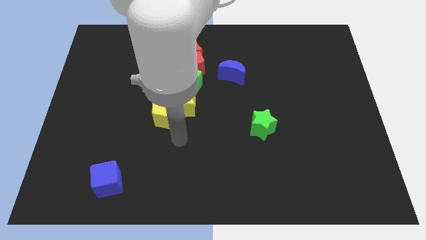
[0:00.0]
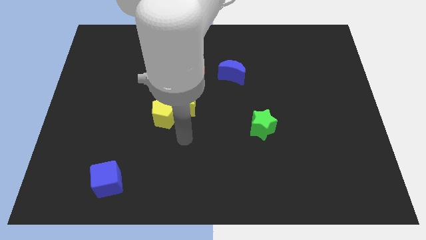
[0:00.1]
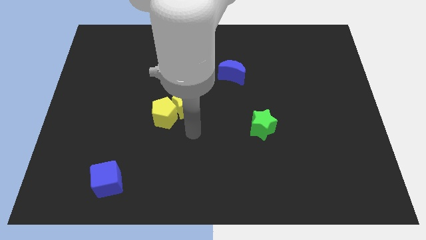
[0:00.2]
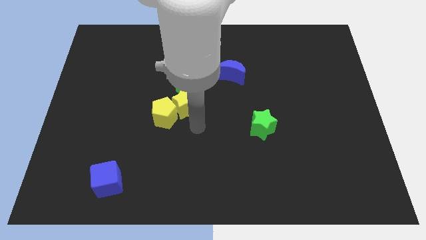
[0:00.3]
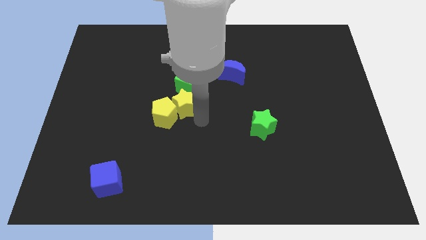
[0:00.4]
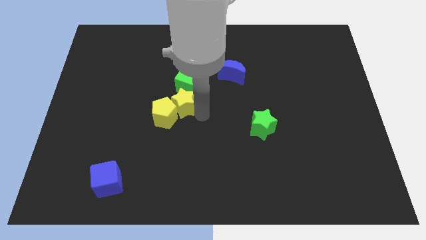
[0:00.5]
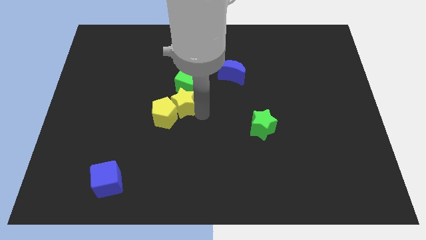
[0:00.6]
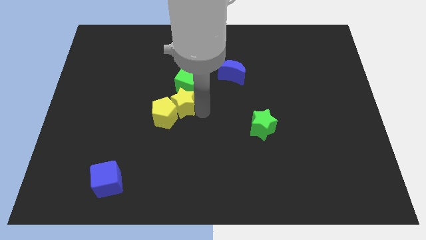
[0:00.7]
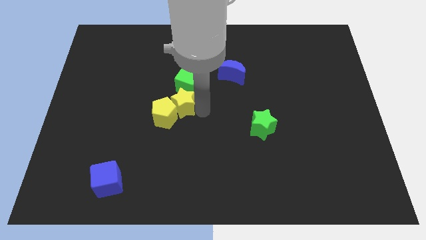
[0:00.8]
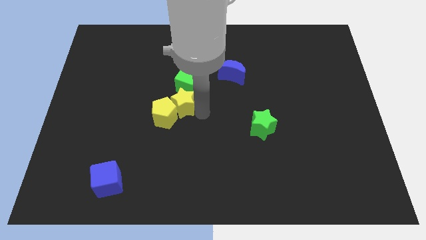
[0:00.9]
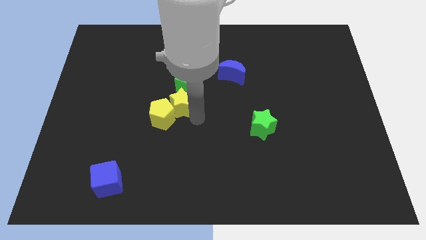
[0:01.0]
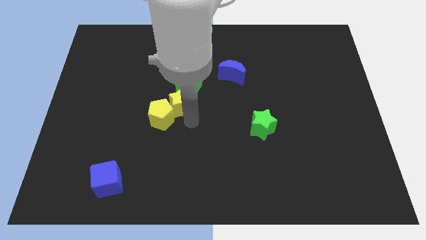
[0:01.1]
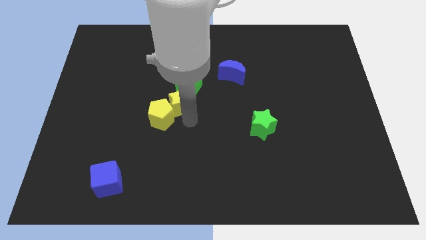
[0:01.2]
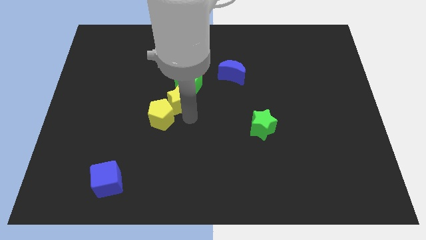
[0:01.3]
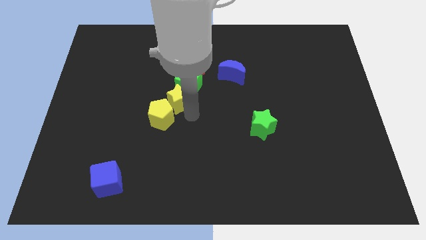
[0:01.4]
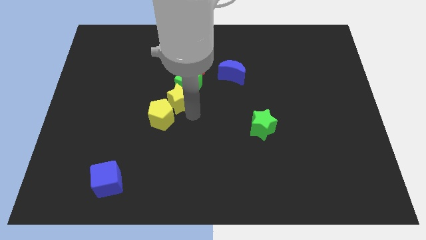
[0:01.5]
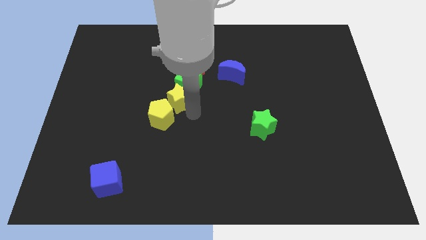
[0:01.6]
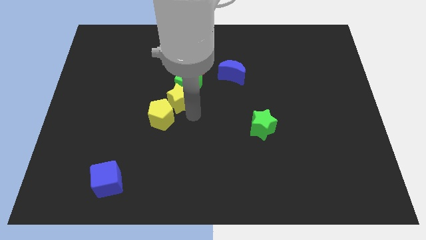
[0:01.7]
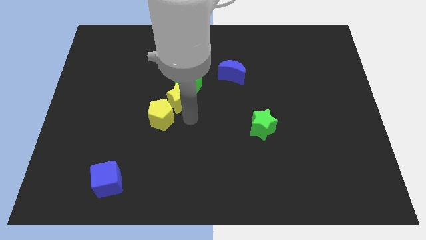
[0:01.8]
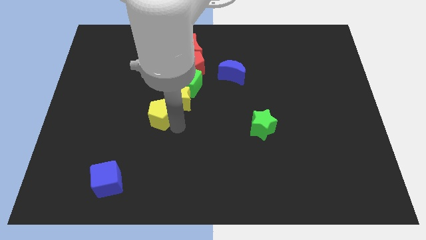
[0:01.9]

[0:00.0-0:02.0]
push the yellow star below green cube

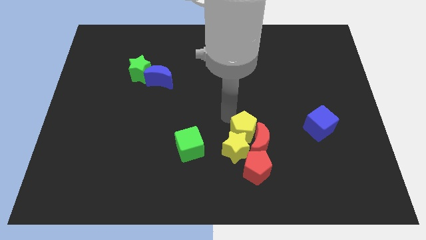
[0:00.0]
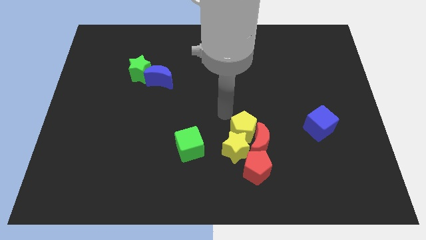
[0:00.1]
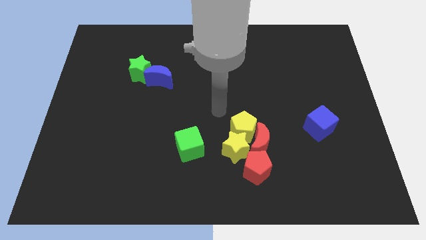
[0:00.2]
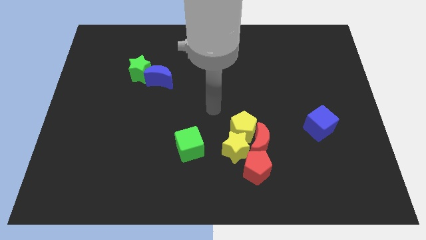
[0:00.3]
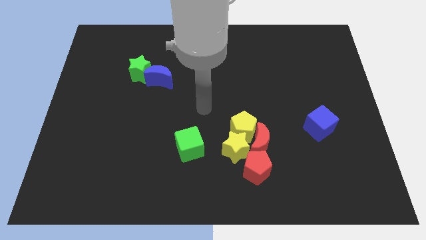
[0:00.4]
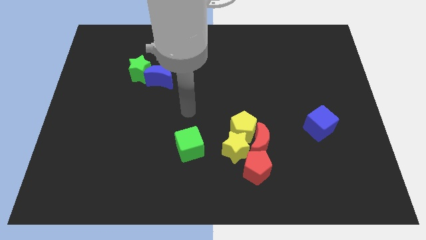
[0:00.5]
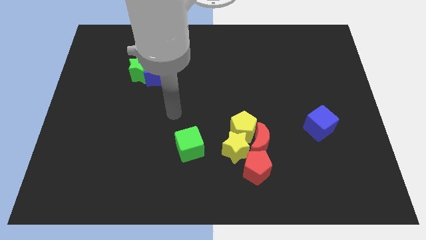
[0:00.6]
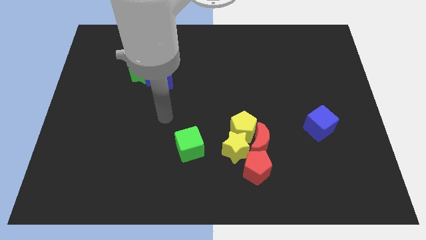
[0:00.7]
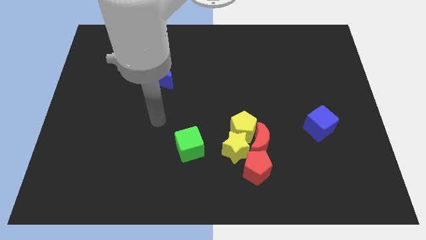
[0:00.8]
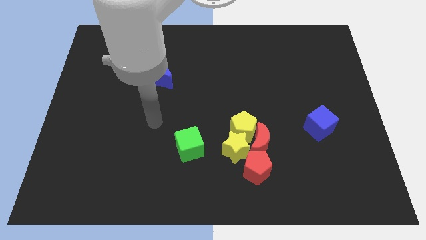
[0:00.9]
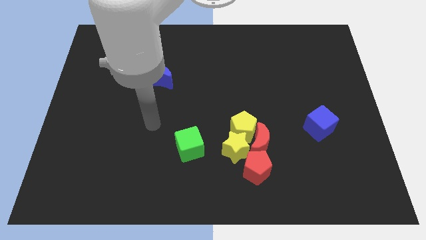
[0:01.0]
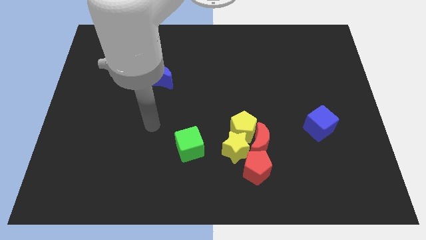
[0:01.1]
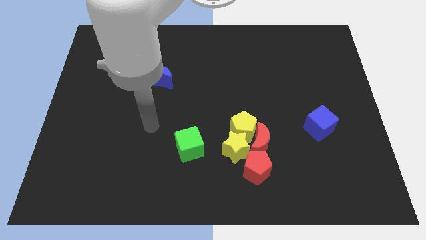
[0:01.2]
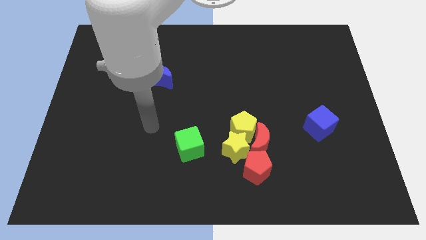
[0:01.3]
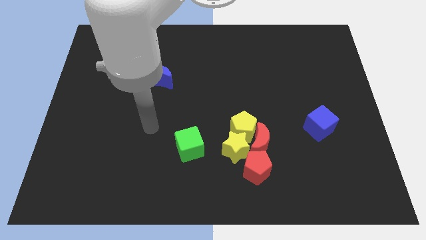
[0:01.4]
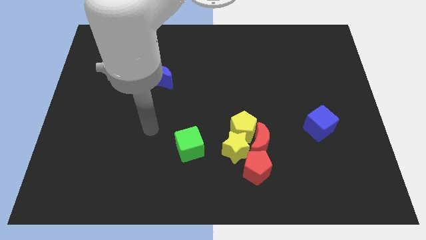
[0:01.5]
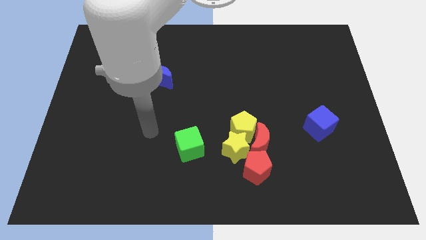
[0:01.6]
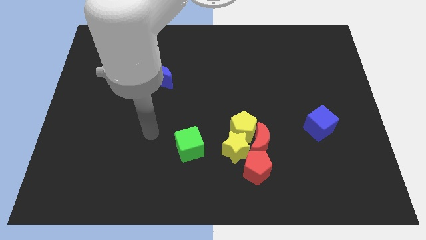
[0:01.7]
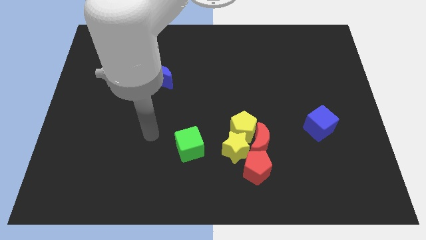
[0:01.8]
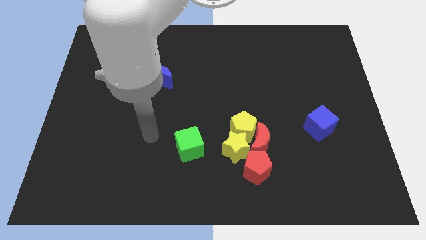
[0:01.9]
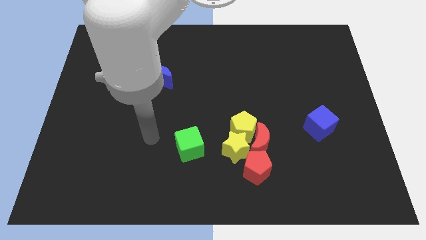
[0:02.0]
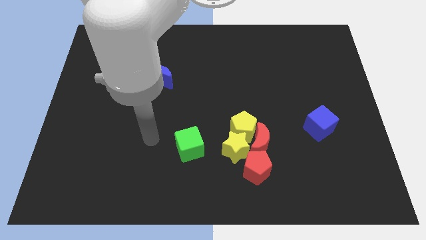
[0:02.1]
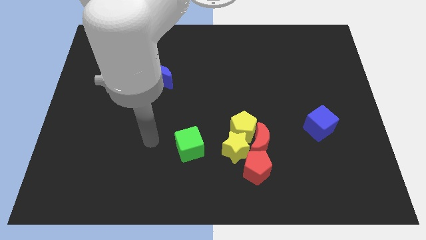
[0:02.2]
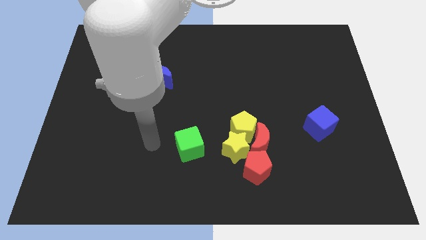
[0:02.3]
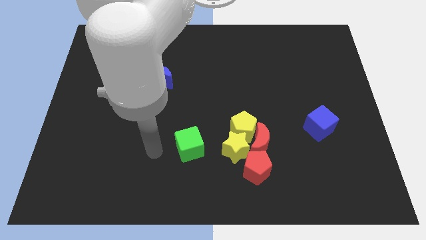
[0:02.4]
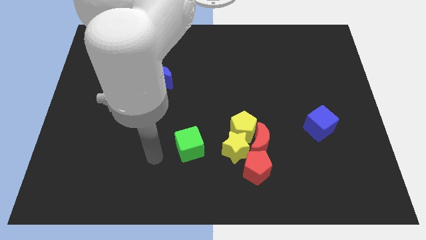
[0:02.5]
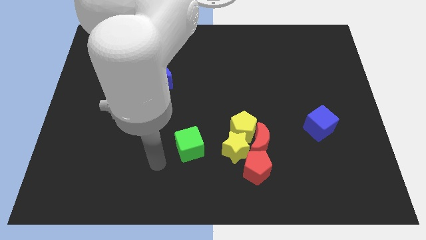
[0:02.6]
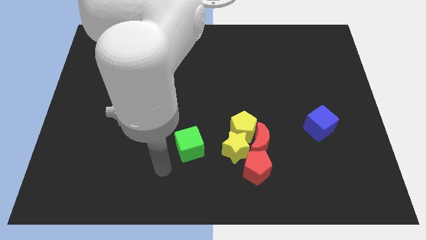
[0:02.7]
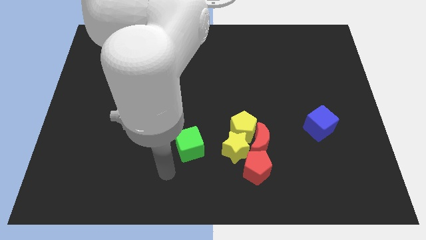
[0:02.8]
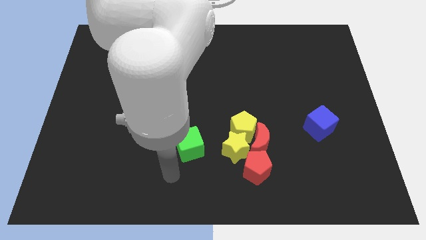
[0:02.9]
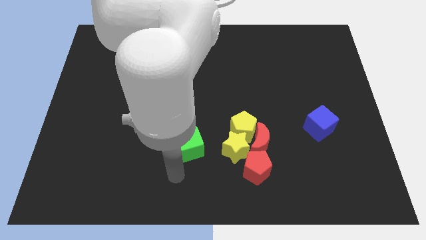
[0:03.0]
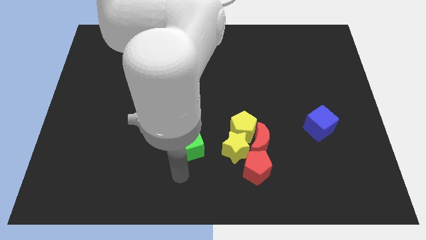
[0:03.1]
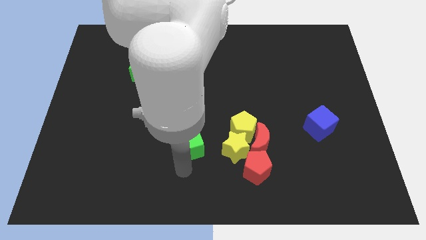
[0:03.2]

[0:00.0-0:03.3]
move your arm at the bottom of green cube

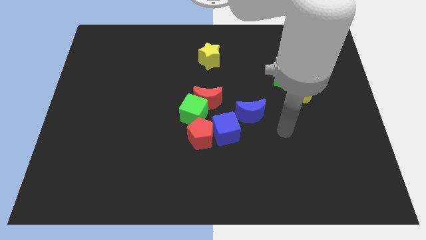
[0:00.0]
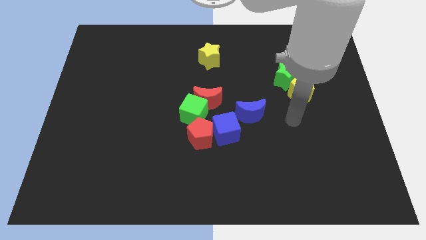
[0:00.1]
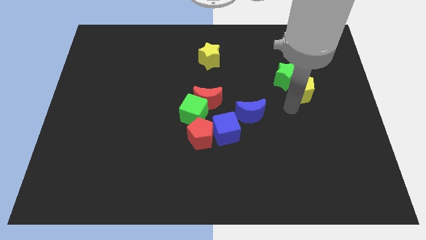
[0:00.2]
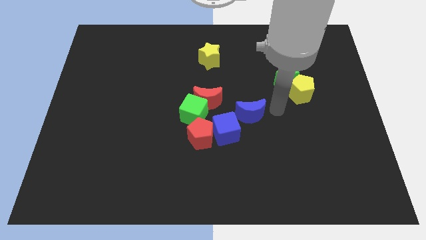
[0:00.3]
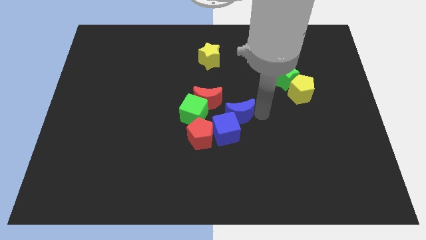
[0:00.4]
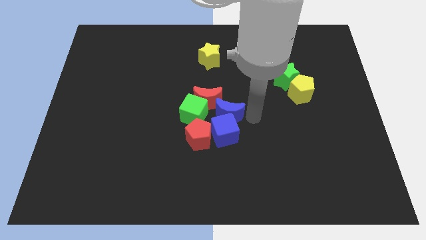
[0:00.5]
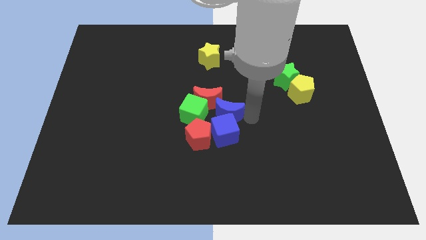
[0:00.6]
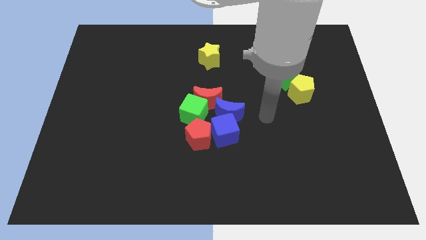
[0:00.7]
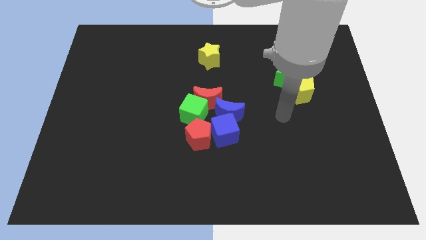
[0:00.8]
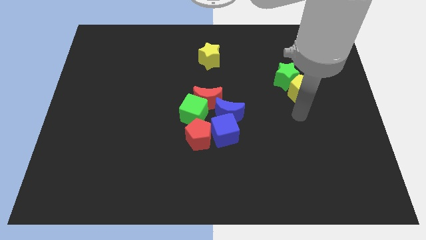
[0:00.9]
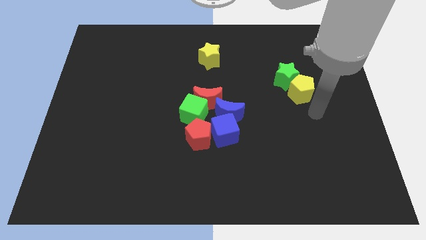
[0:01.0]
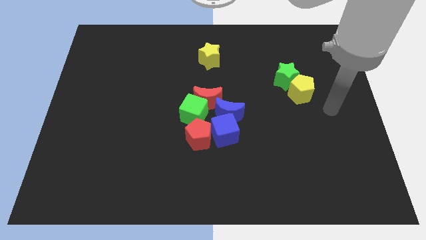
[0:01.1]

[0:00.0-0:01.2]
move blue moon to the center of the board

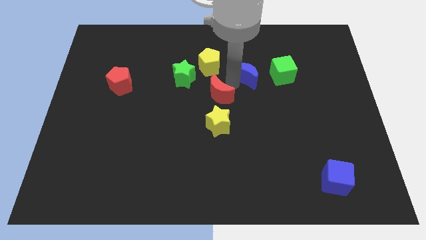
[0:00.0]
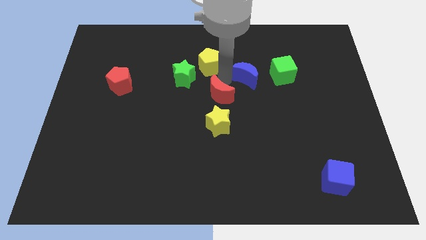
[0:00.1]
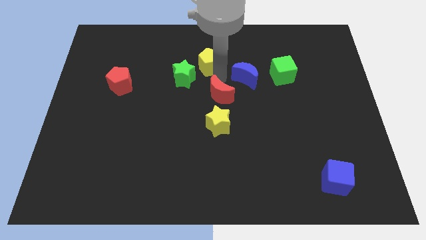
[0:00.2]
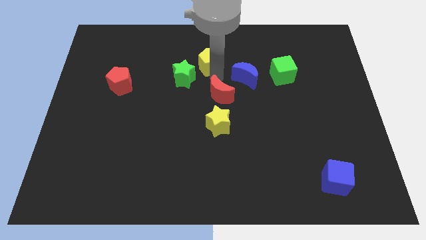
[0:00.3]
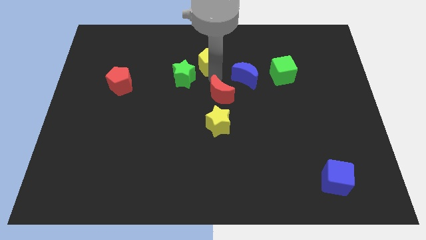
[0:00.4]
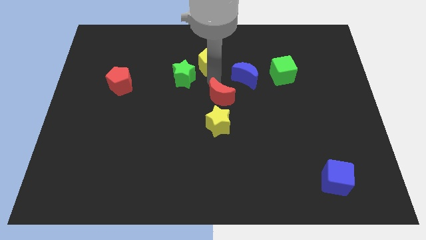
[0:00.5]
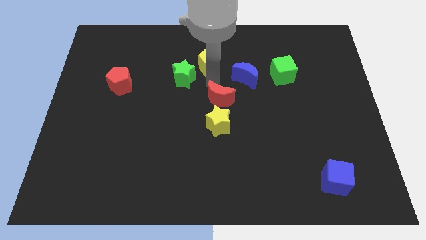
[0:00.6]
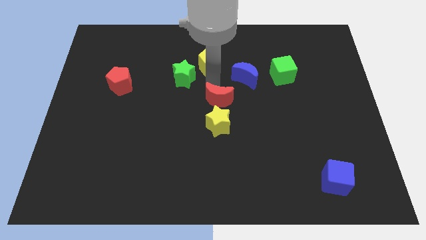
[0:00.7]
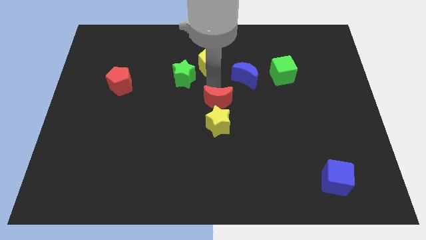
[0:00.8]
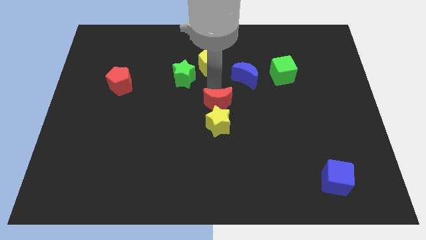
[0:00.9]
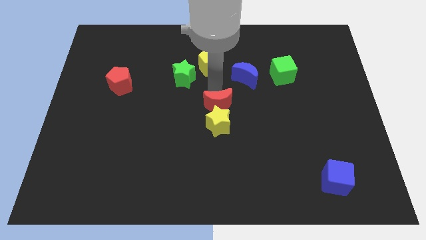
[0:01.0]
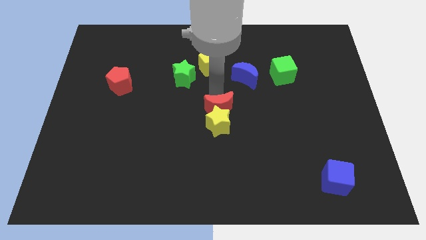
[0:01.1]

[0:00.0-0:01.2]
move the red moon near to the yellow star

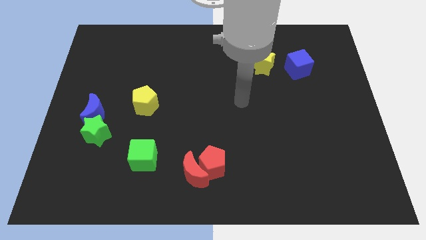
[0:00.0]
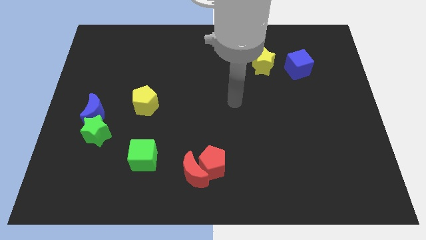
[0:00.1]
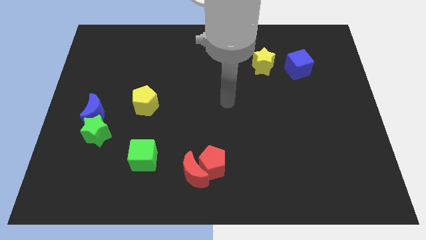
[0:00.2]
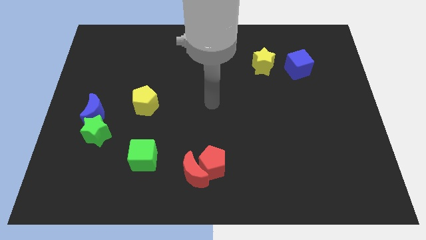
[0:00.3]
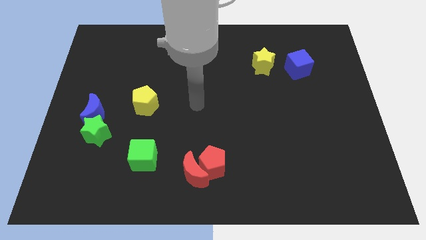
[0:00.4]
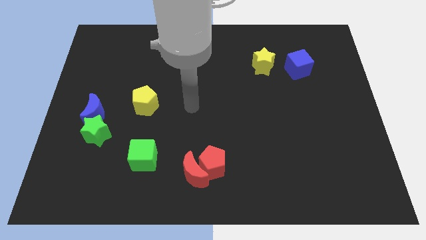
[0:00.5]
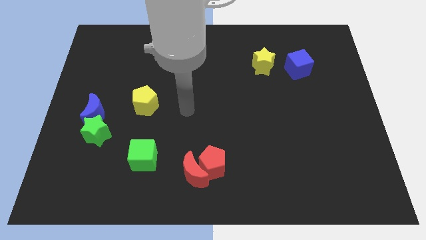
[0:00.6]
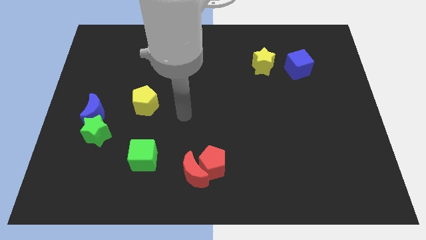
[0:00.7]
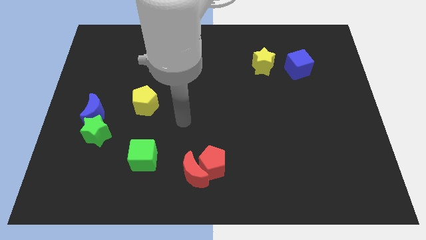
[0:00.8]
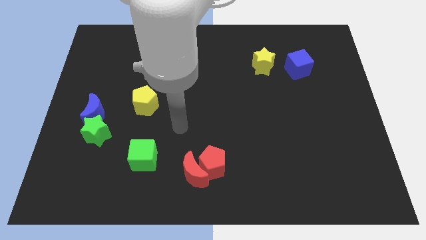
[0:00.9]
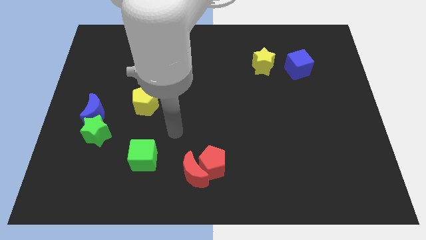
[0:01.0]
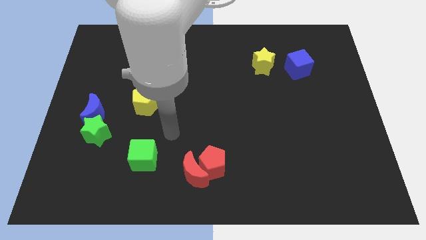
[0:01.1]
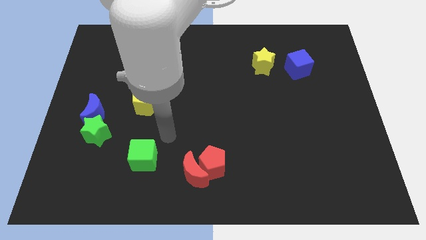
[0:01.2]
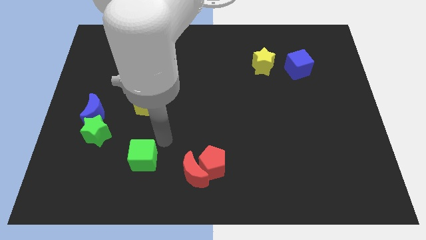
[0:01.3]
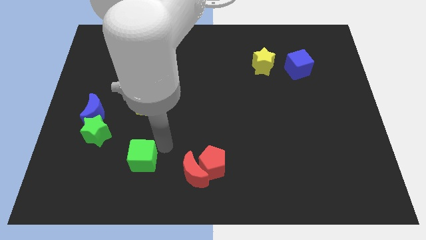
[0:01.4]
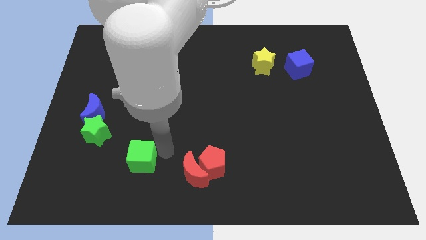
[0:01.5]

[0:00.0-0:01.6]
move your arm to the right of the green cube
